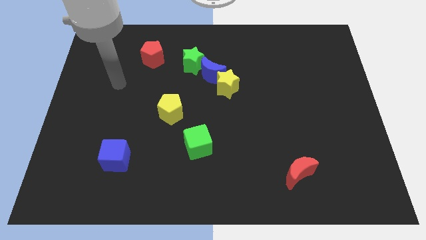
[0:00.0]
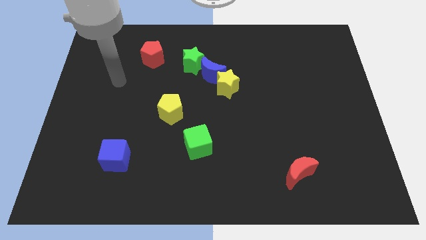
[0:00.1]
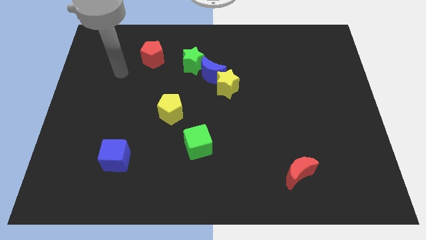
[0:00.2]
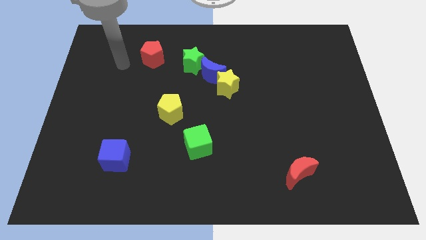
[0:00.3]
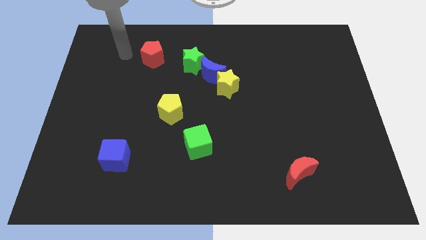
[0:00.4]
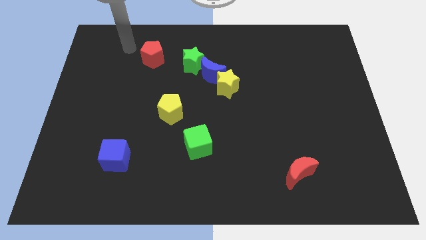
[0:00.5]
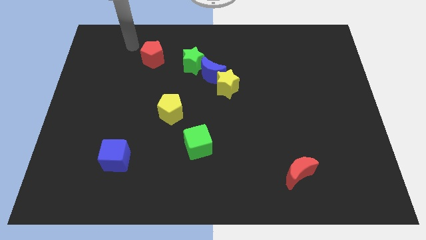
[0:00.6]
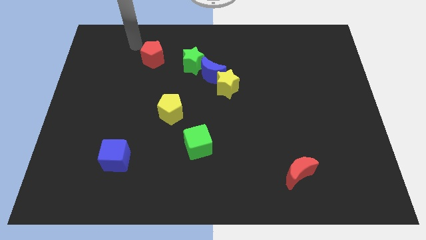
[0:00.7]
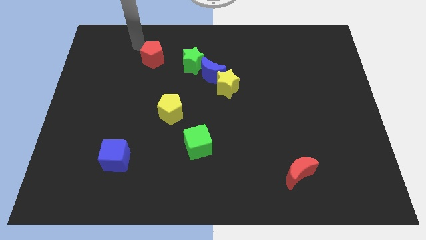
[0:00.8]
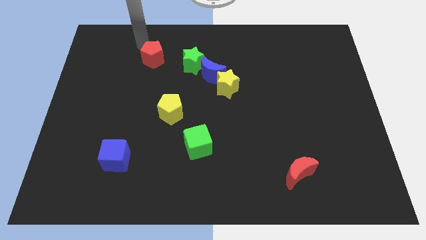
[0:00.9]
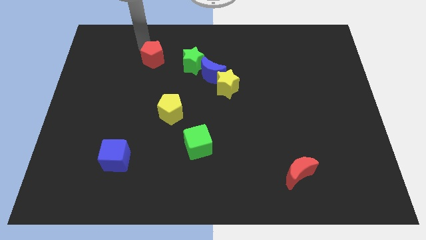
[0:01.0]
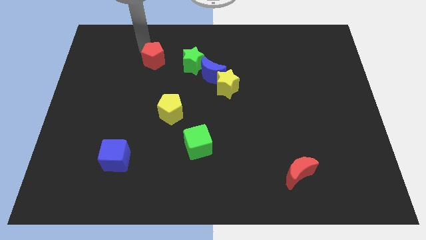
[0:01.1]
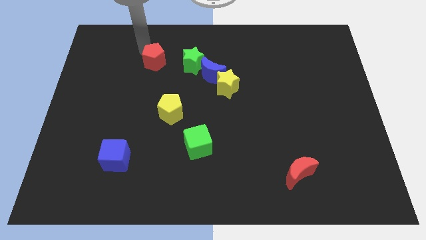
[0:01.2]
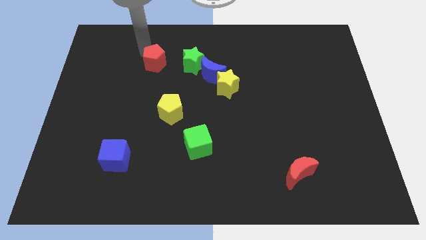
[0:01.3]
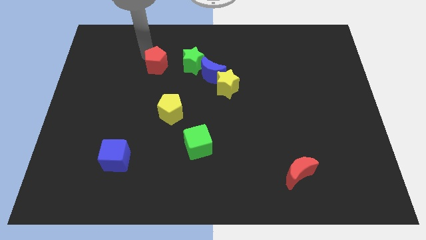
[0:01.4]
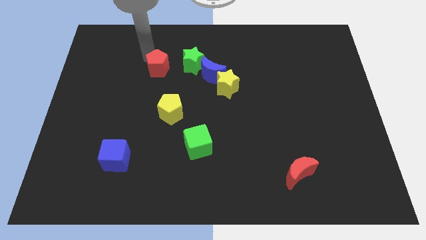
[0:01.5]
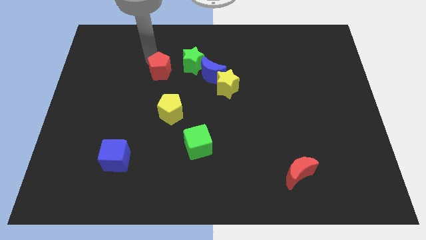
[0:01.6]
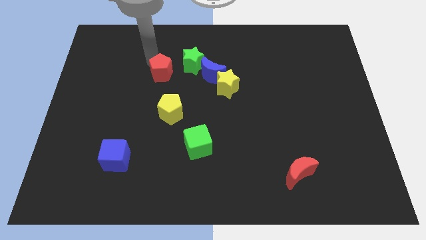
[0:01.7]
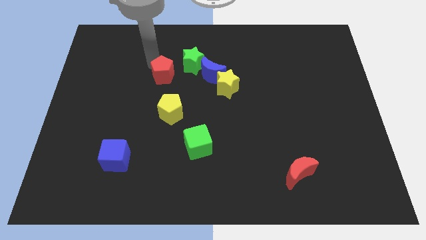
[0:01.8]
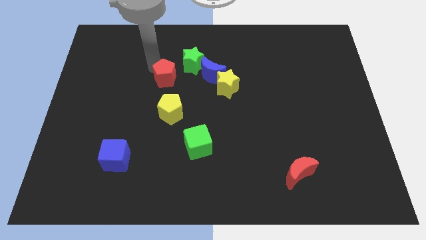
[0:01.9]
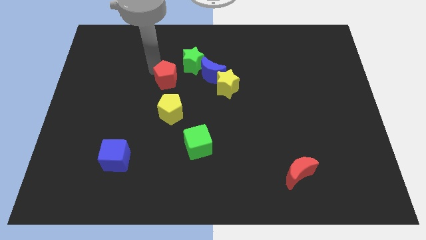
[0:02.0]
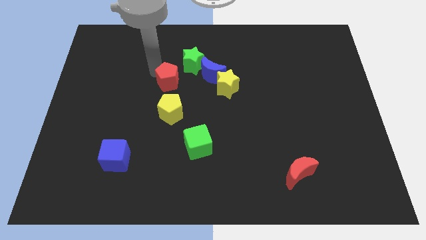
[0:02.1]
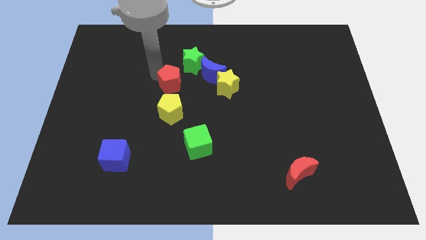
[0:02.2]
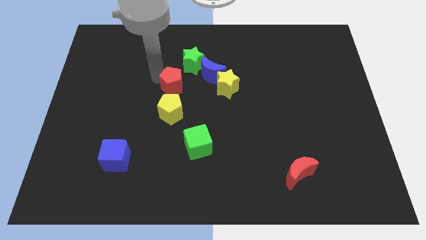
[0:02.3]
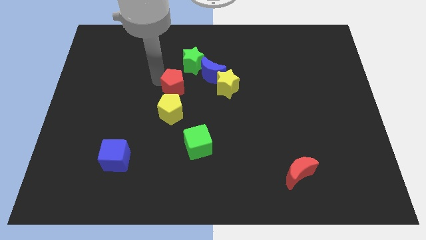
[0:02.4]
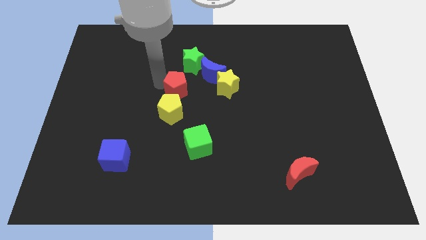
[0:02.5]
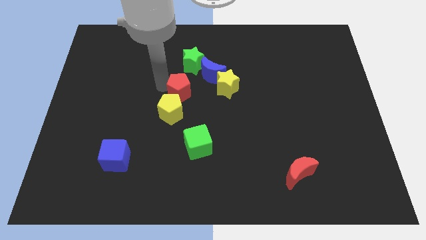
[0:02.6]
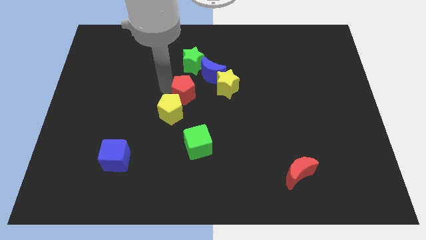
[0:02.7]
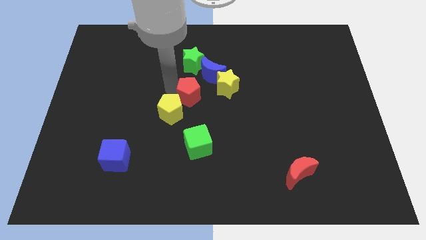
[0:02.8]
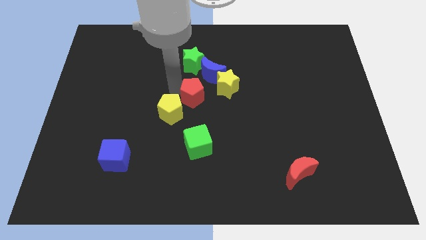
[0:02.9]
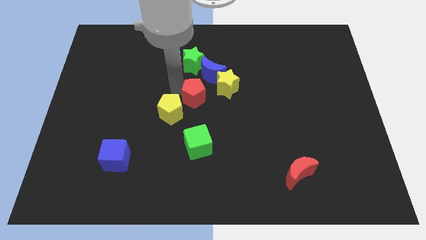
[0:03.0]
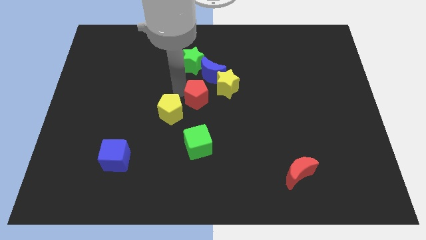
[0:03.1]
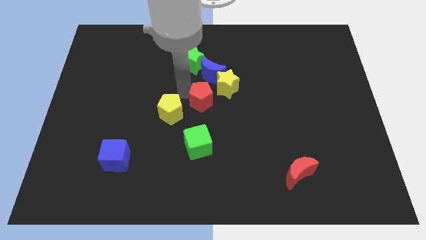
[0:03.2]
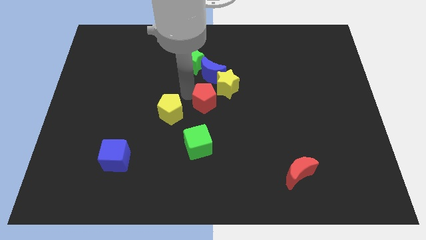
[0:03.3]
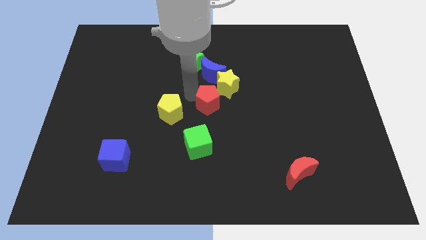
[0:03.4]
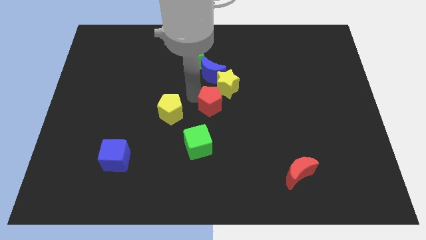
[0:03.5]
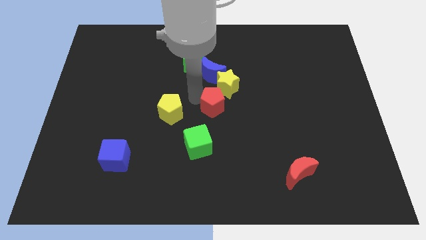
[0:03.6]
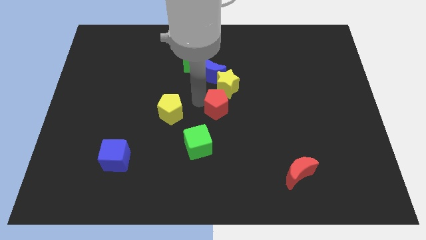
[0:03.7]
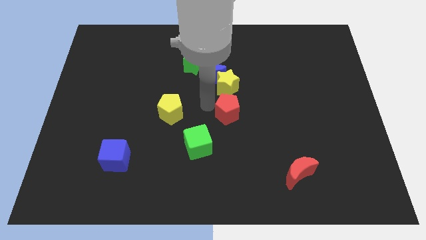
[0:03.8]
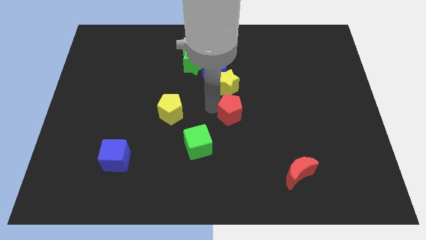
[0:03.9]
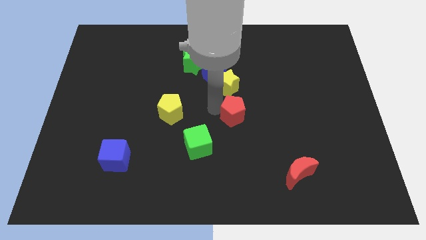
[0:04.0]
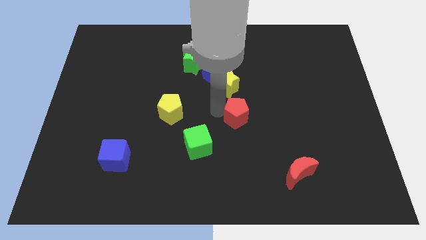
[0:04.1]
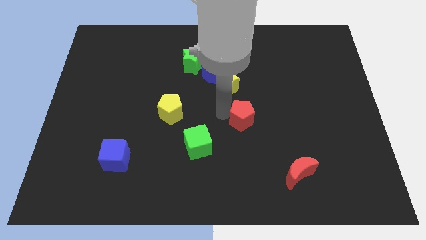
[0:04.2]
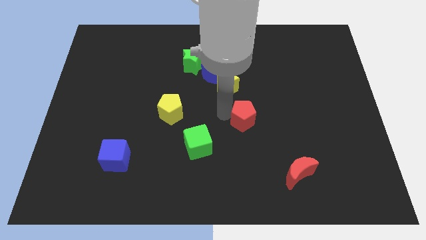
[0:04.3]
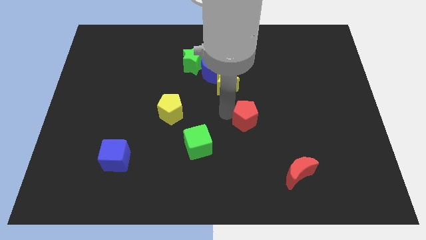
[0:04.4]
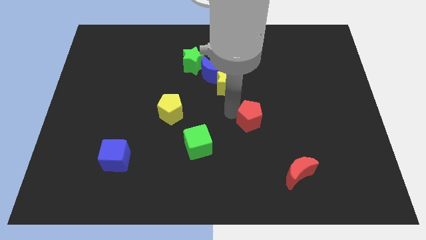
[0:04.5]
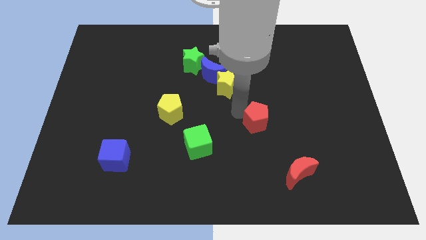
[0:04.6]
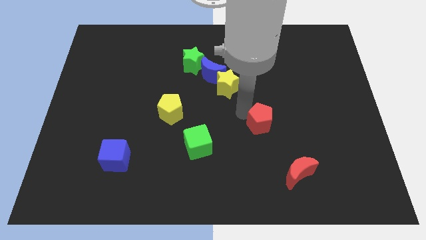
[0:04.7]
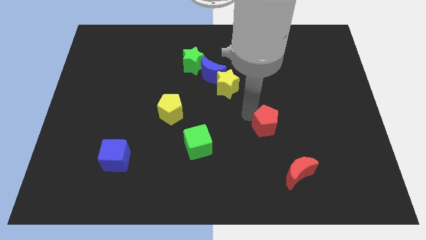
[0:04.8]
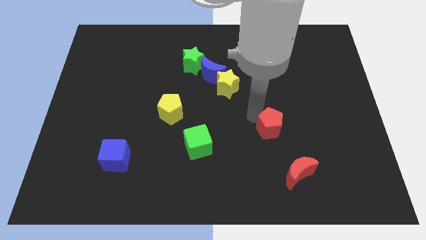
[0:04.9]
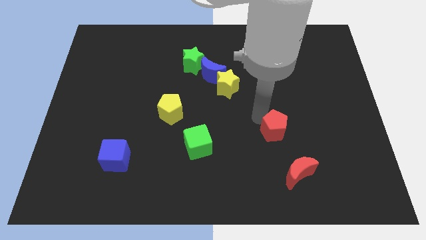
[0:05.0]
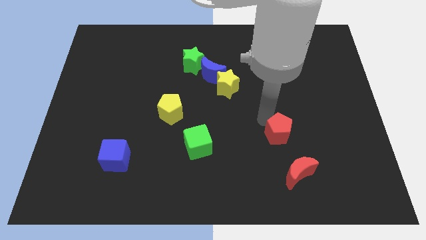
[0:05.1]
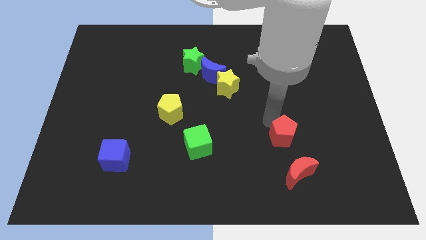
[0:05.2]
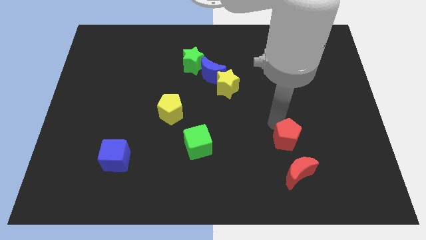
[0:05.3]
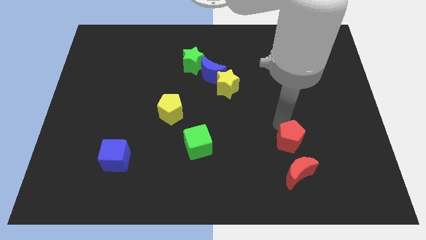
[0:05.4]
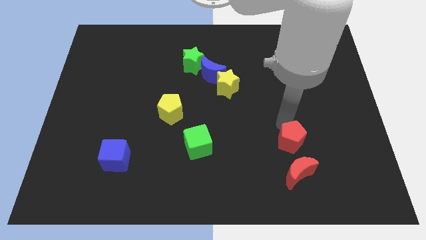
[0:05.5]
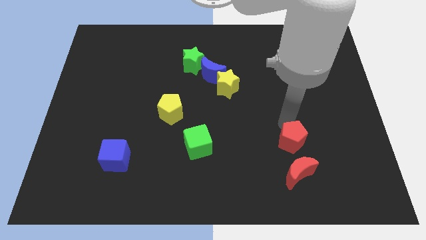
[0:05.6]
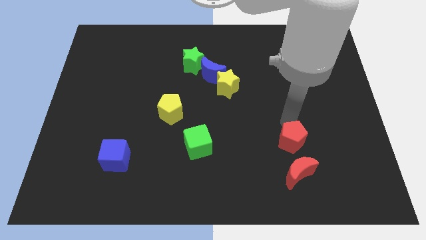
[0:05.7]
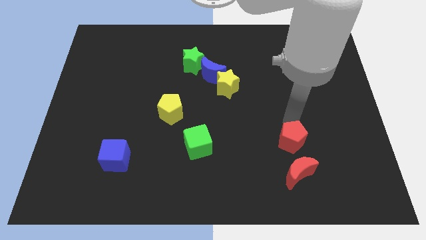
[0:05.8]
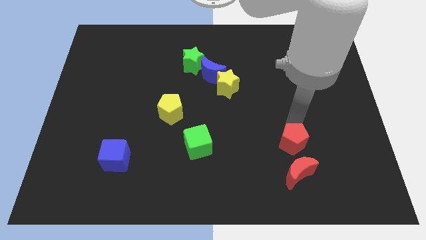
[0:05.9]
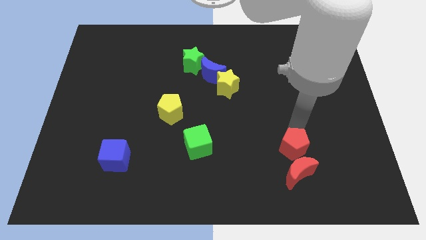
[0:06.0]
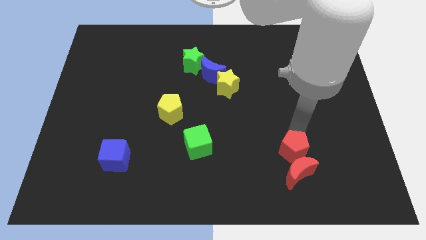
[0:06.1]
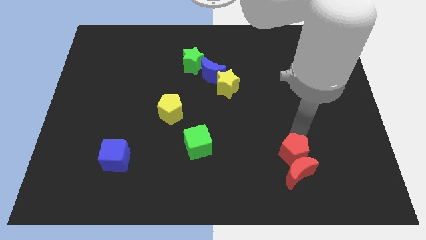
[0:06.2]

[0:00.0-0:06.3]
put the red pentagon towards the red moon

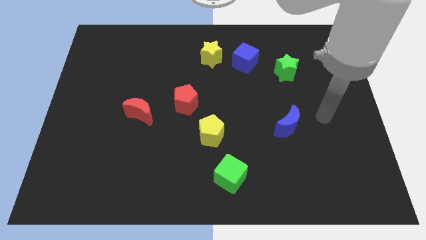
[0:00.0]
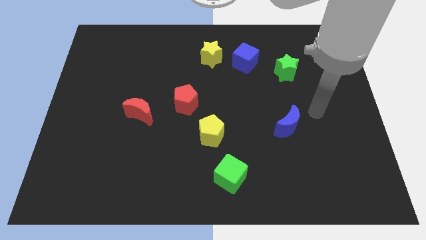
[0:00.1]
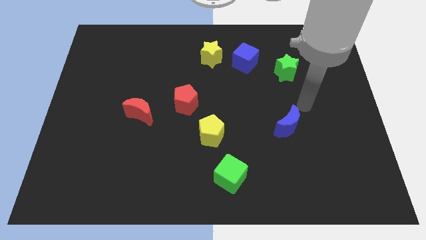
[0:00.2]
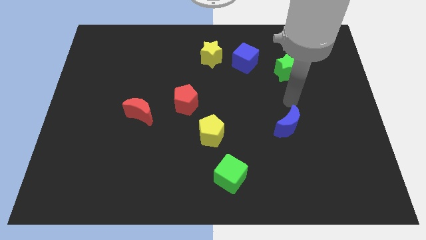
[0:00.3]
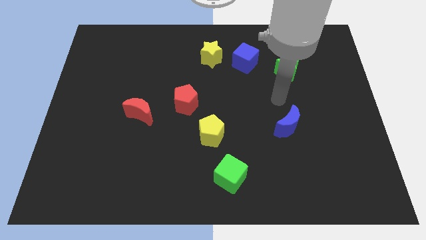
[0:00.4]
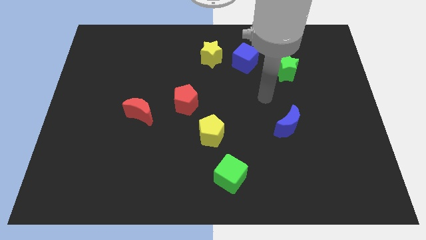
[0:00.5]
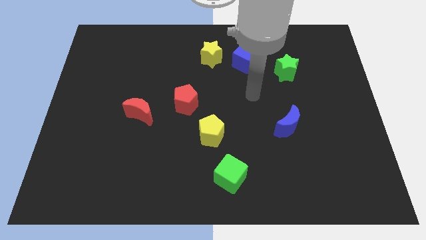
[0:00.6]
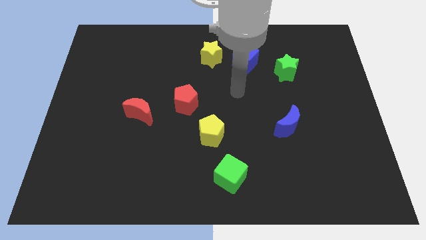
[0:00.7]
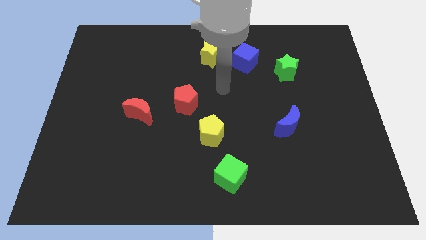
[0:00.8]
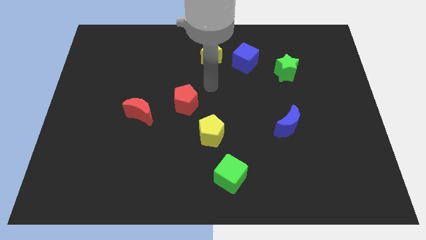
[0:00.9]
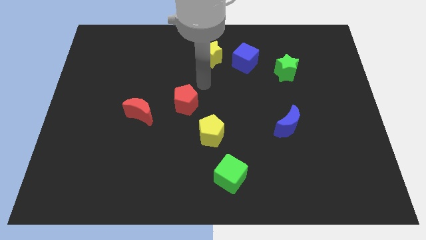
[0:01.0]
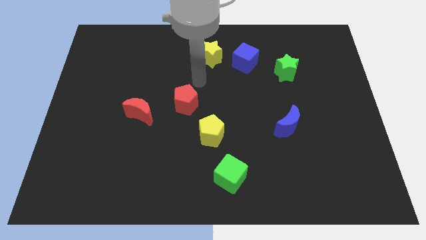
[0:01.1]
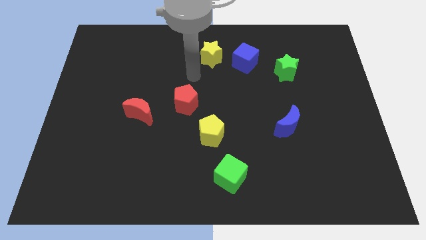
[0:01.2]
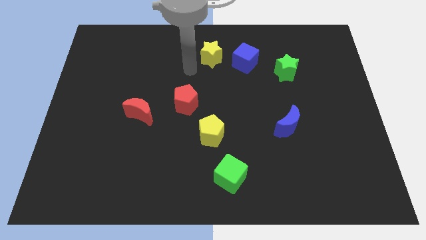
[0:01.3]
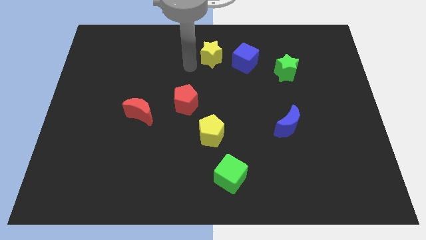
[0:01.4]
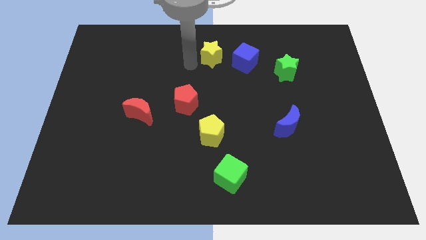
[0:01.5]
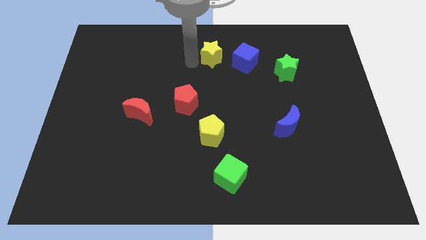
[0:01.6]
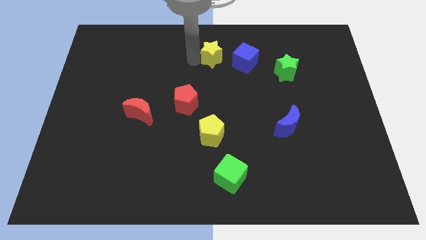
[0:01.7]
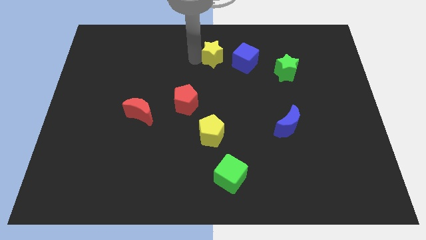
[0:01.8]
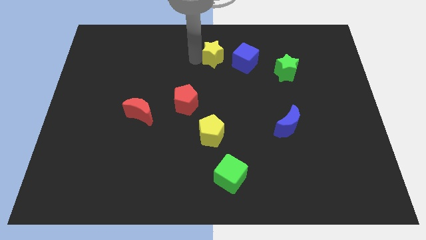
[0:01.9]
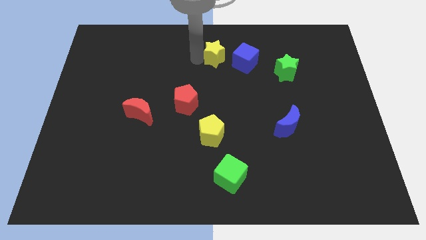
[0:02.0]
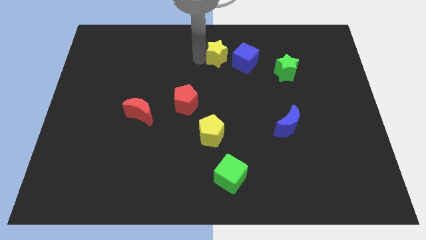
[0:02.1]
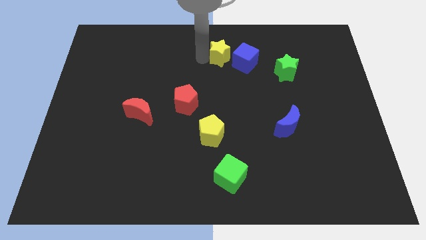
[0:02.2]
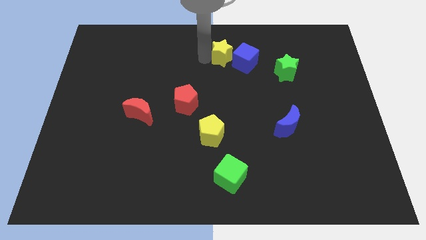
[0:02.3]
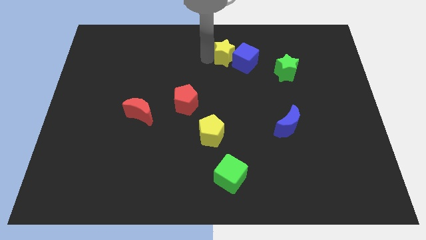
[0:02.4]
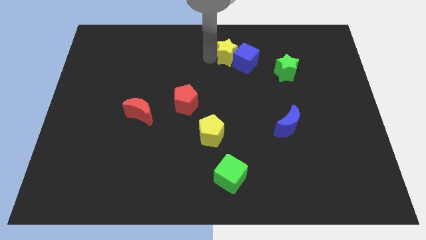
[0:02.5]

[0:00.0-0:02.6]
push the yellow star to the blue cube

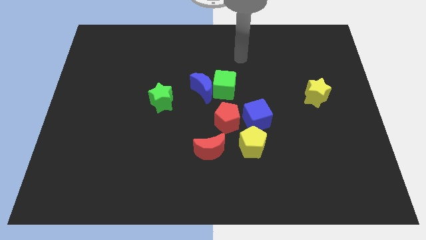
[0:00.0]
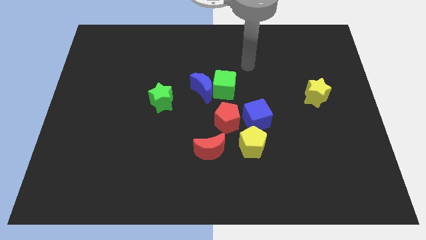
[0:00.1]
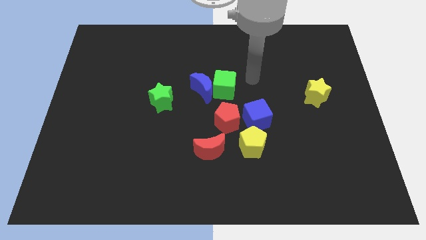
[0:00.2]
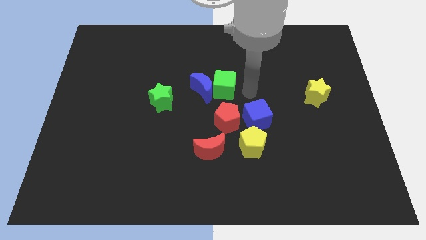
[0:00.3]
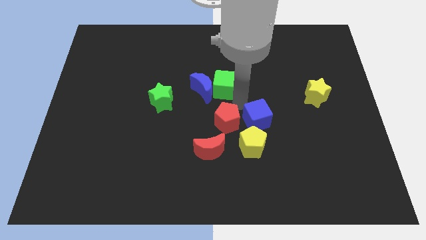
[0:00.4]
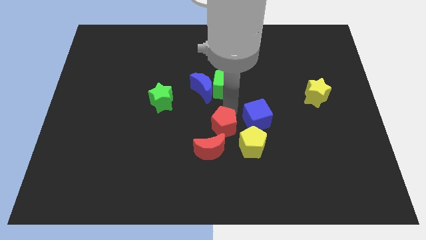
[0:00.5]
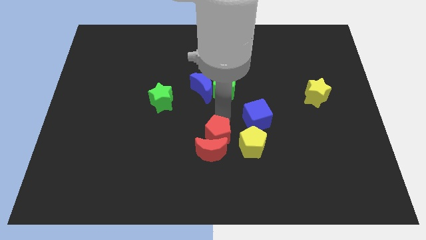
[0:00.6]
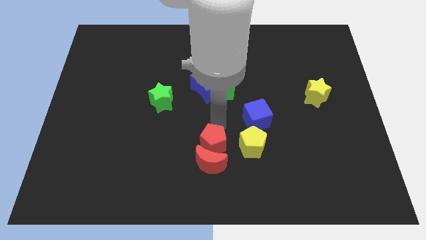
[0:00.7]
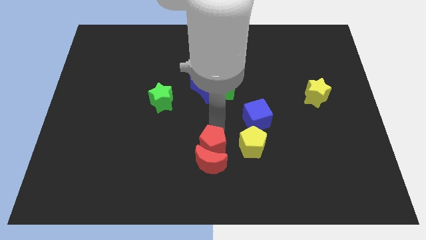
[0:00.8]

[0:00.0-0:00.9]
move the red pentagon next to the red moon
